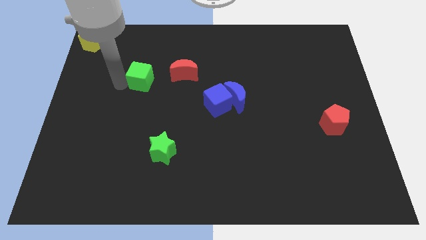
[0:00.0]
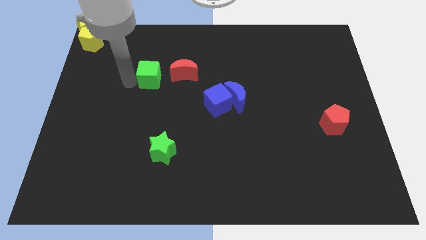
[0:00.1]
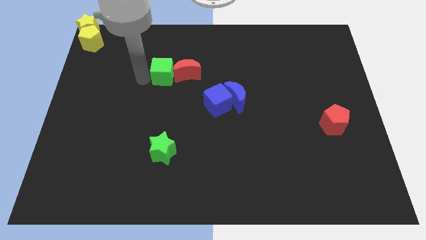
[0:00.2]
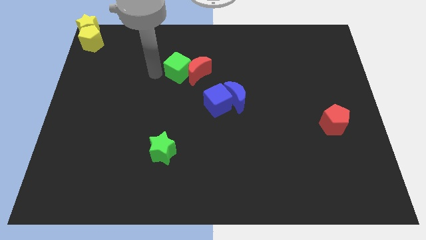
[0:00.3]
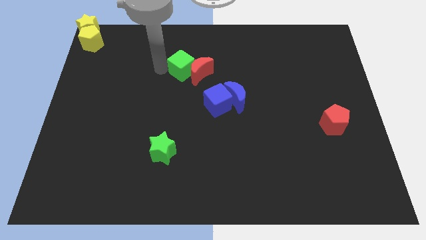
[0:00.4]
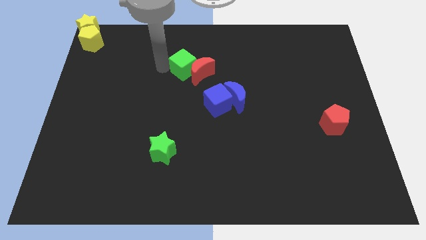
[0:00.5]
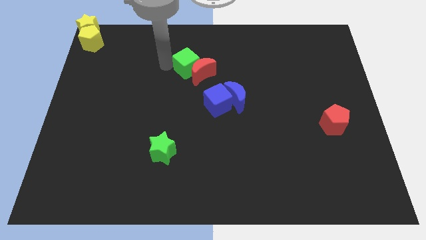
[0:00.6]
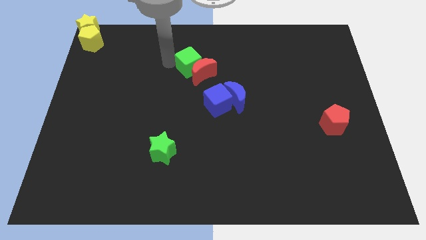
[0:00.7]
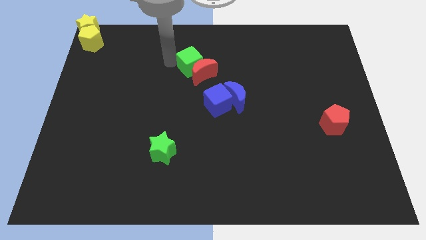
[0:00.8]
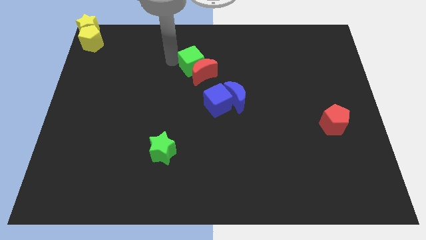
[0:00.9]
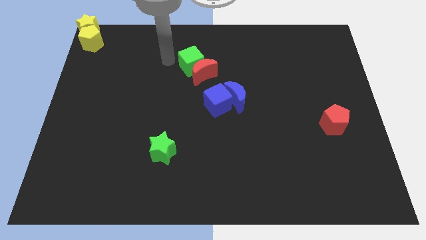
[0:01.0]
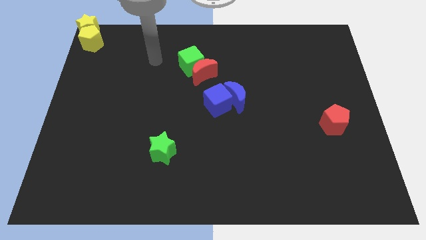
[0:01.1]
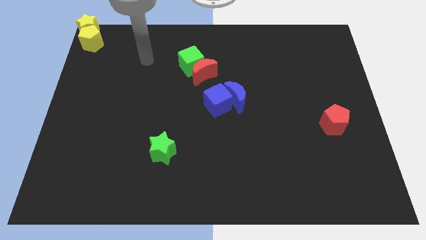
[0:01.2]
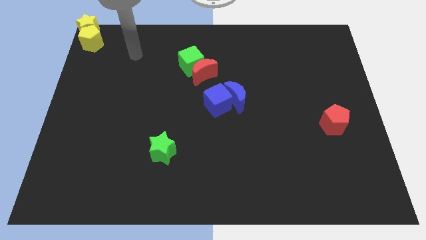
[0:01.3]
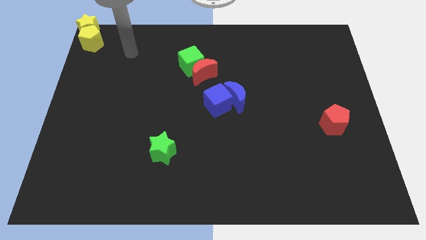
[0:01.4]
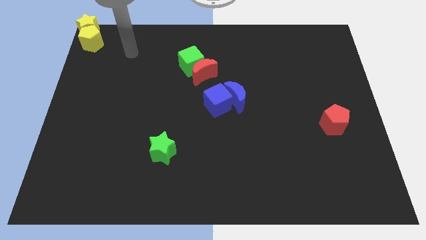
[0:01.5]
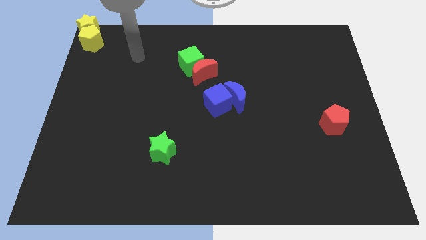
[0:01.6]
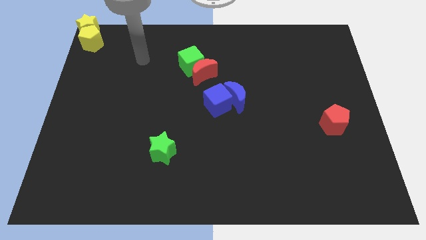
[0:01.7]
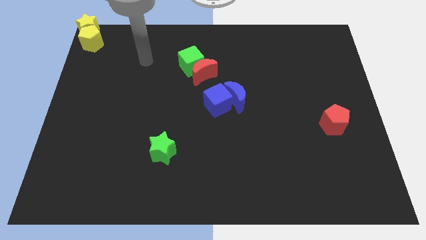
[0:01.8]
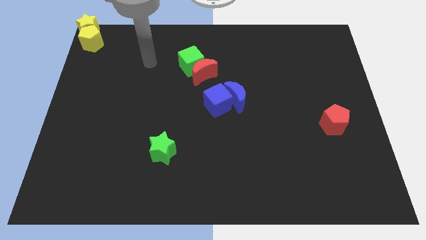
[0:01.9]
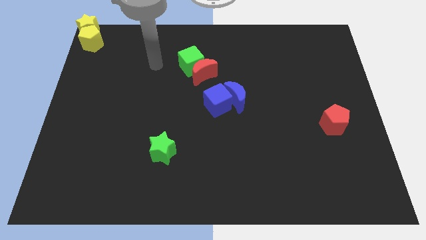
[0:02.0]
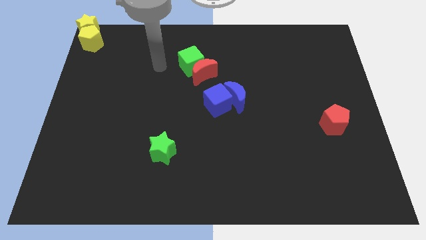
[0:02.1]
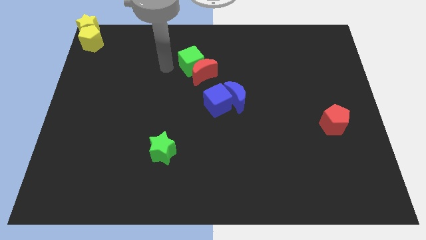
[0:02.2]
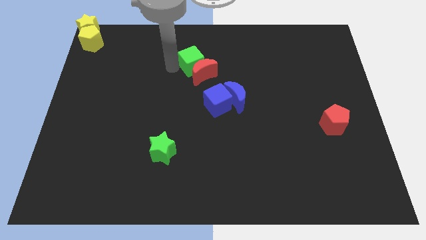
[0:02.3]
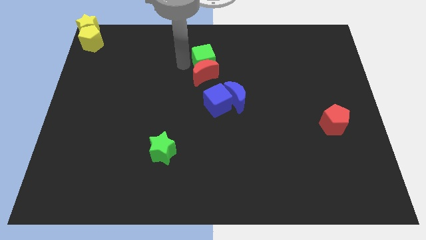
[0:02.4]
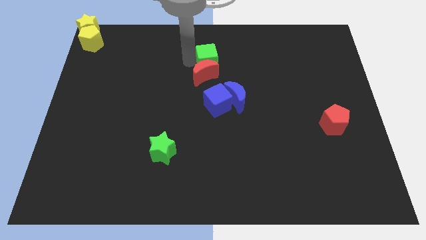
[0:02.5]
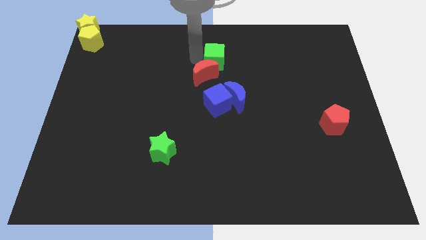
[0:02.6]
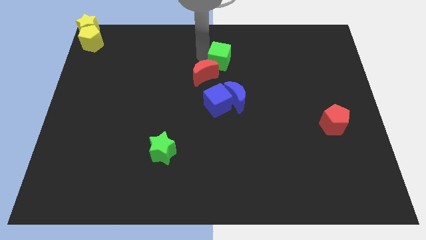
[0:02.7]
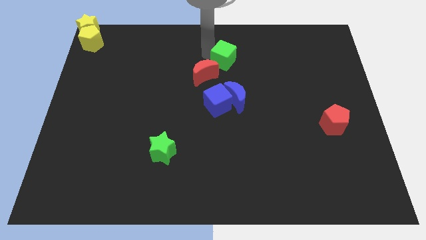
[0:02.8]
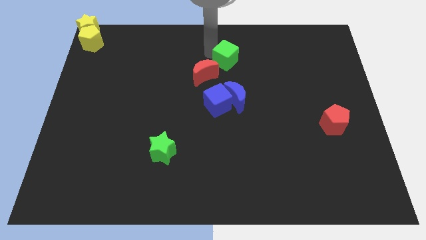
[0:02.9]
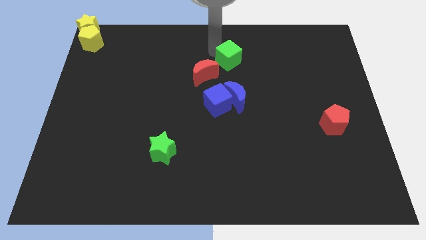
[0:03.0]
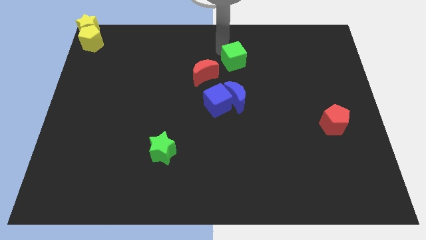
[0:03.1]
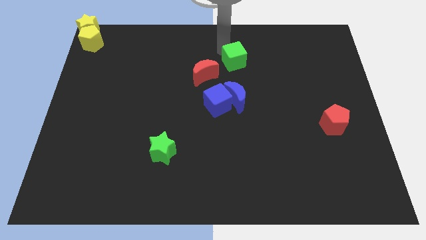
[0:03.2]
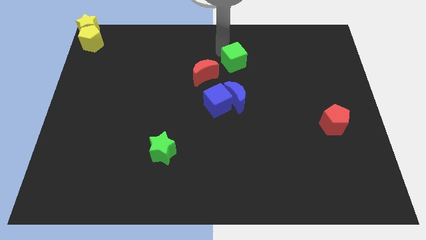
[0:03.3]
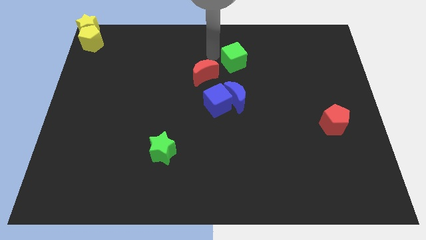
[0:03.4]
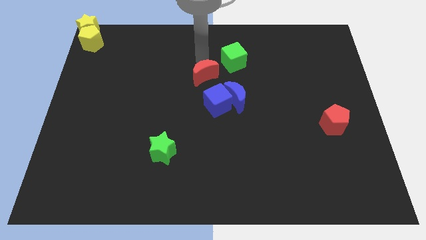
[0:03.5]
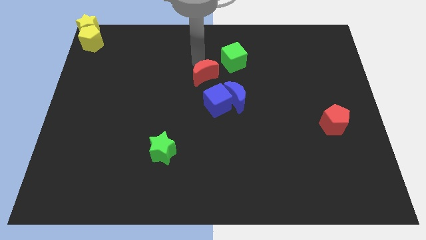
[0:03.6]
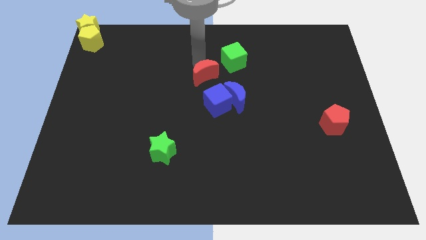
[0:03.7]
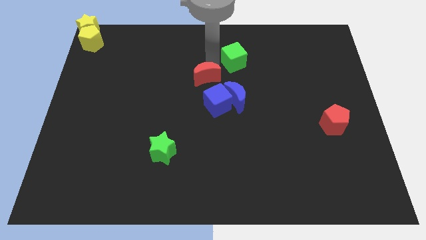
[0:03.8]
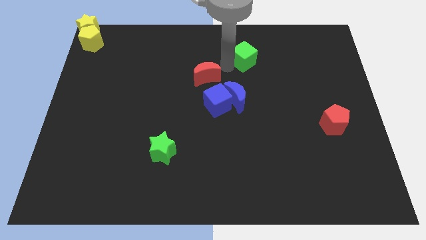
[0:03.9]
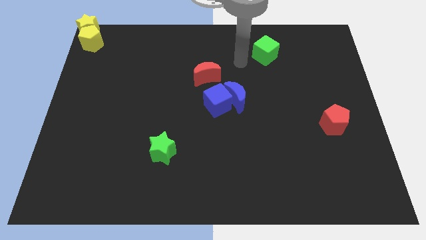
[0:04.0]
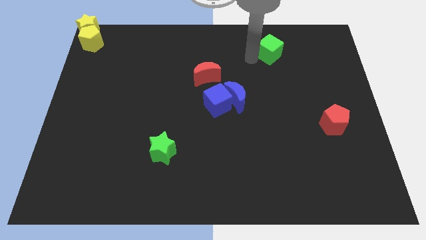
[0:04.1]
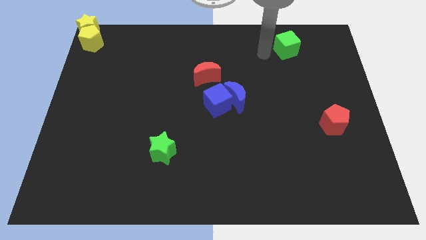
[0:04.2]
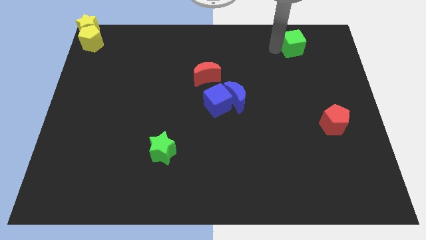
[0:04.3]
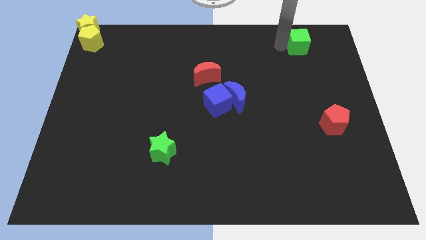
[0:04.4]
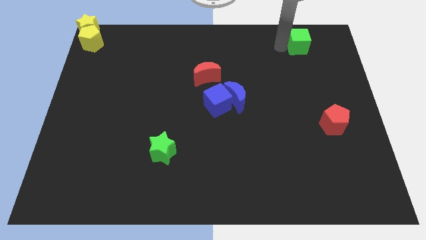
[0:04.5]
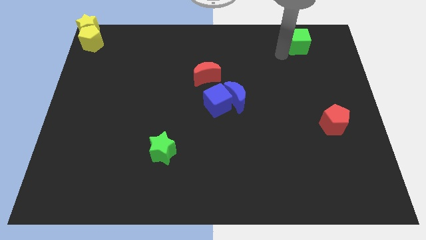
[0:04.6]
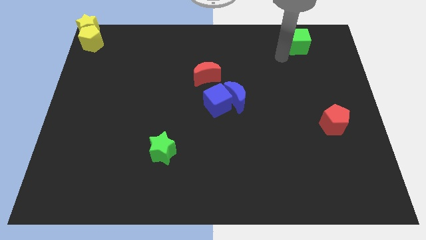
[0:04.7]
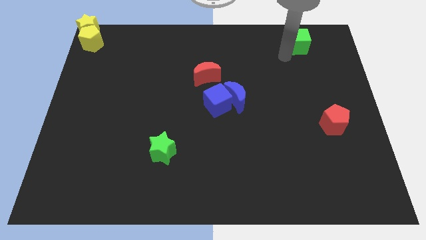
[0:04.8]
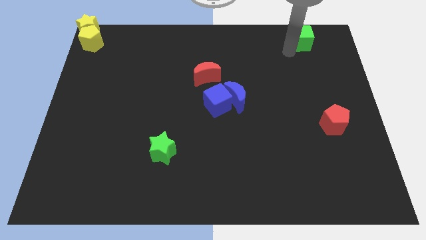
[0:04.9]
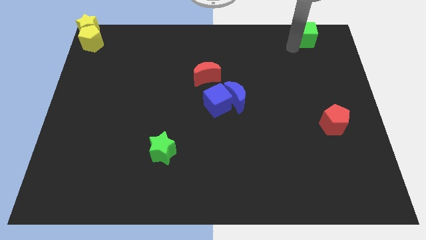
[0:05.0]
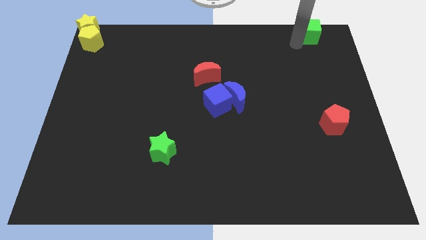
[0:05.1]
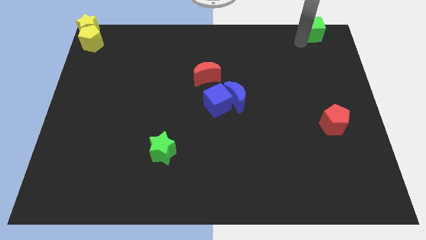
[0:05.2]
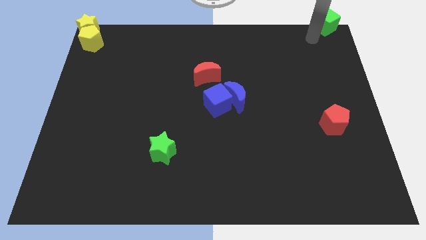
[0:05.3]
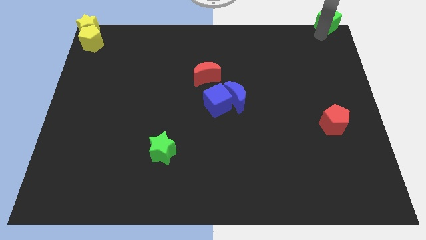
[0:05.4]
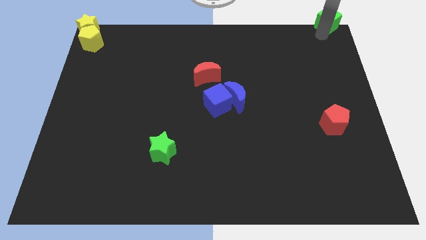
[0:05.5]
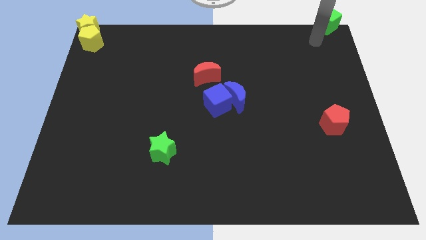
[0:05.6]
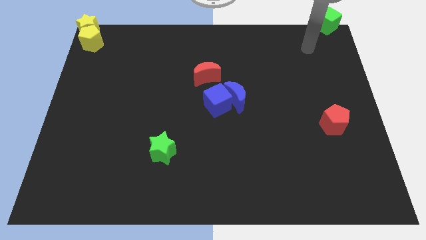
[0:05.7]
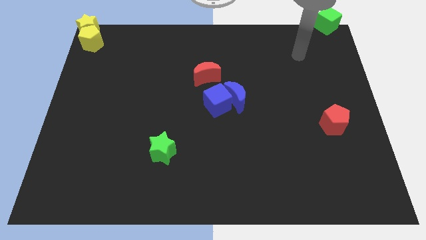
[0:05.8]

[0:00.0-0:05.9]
place green cube to the top right corner of the board

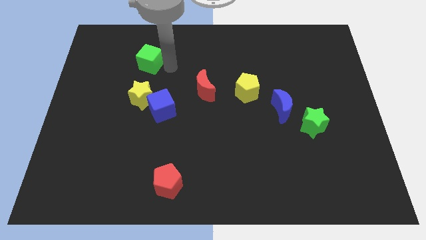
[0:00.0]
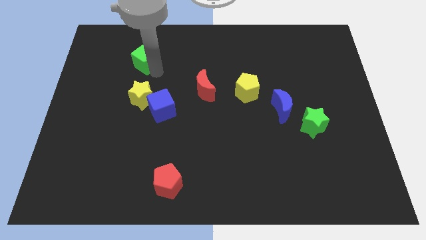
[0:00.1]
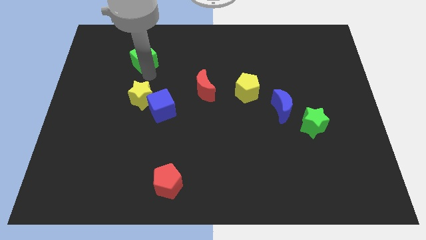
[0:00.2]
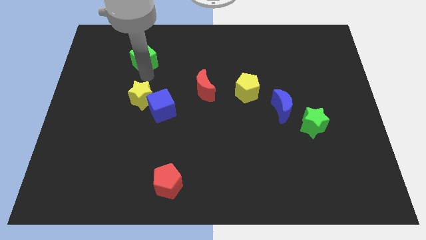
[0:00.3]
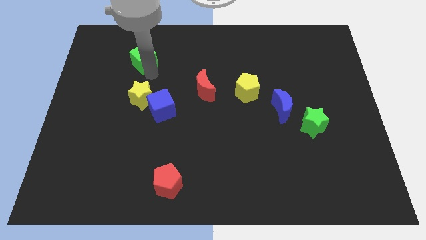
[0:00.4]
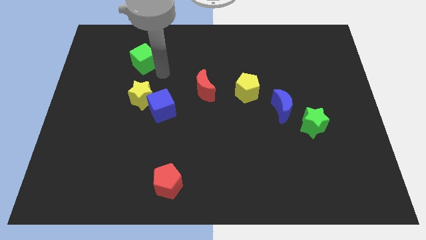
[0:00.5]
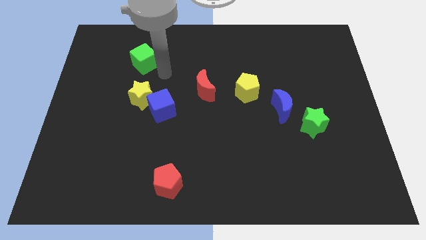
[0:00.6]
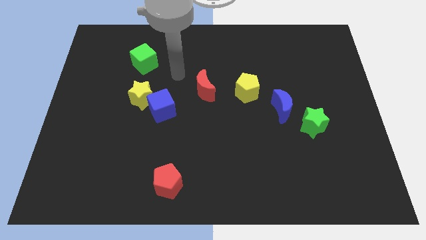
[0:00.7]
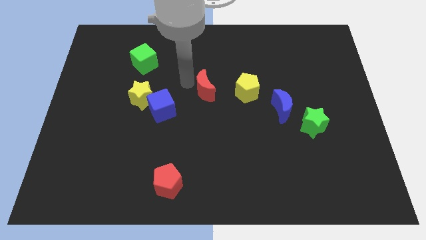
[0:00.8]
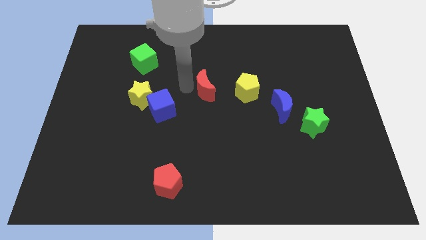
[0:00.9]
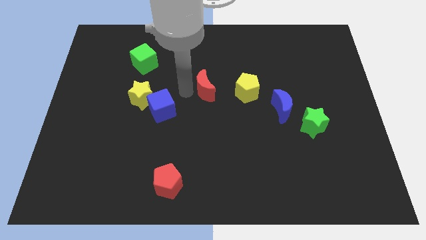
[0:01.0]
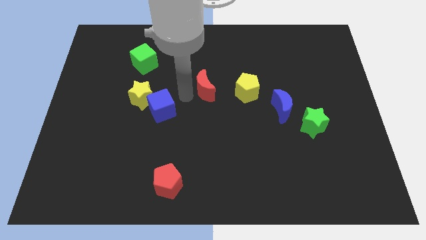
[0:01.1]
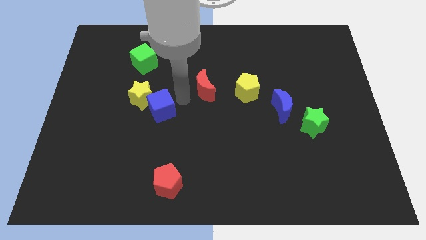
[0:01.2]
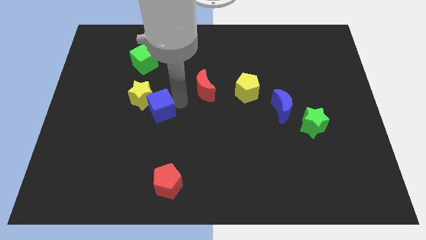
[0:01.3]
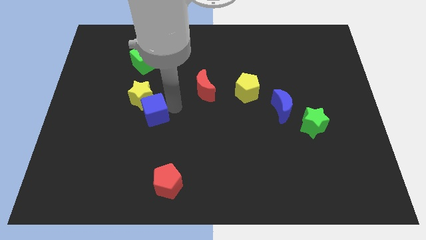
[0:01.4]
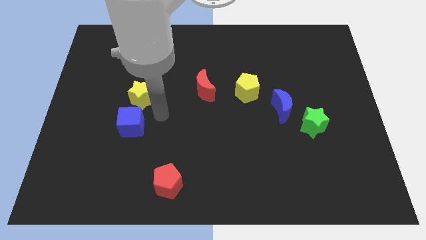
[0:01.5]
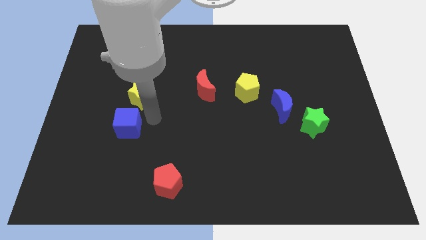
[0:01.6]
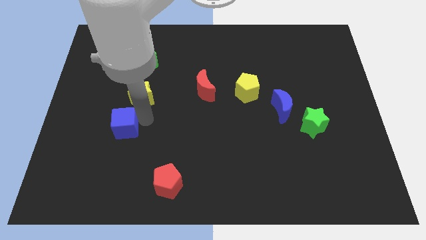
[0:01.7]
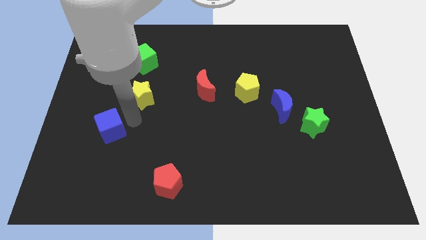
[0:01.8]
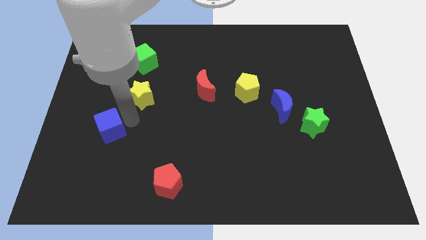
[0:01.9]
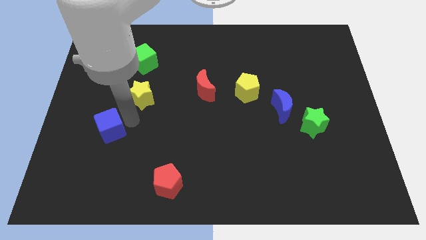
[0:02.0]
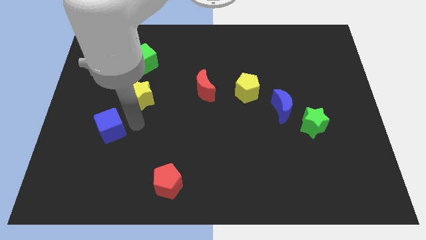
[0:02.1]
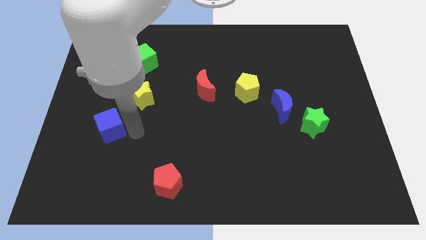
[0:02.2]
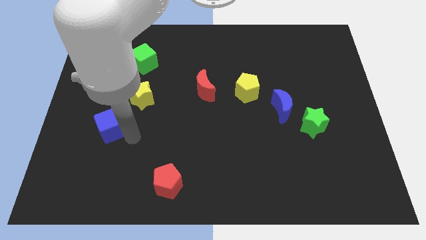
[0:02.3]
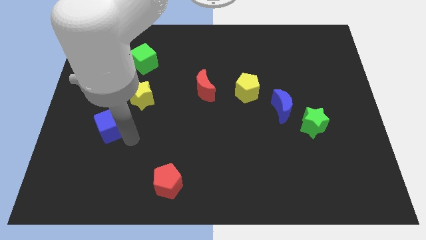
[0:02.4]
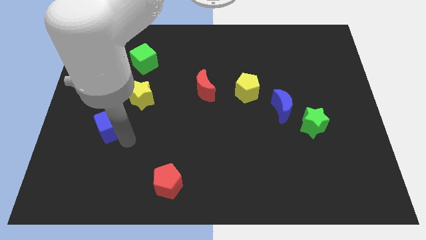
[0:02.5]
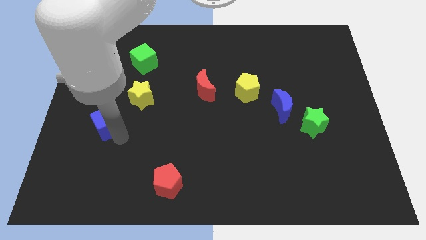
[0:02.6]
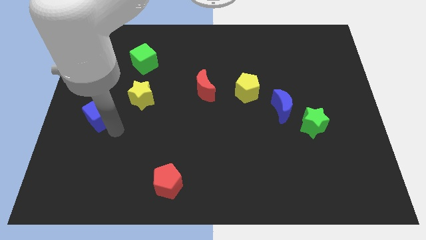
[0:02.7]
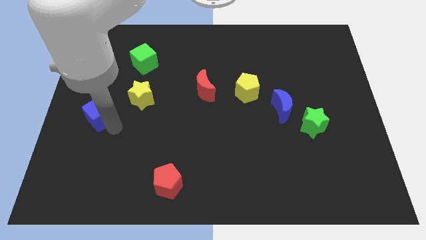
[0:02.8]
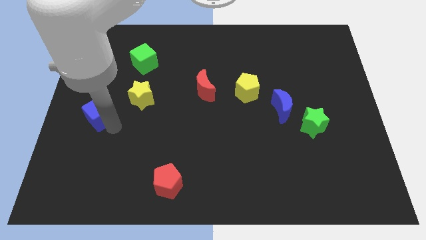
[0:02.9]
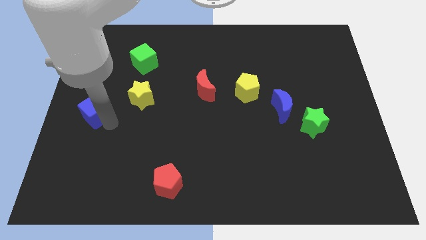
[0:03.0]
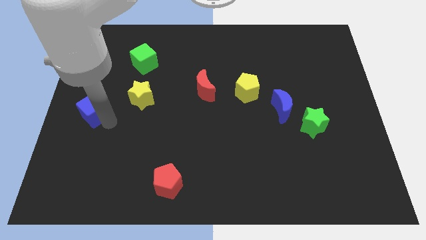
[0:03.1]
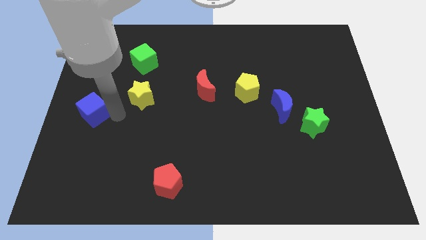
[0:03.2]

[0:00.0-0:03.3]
place the blue cube near the left center of the board
